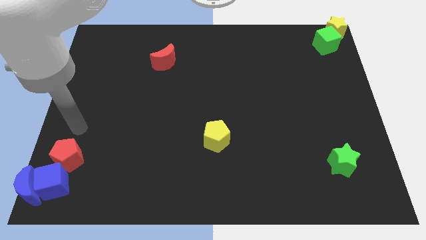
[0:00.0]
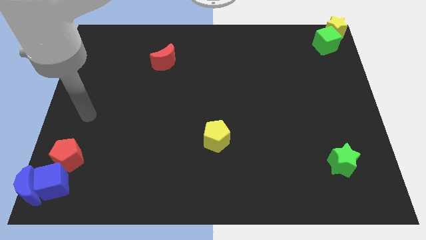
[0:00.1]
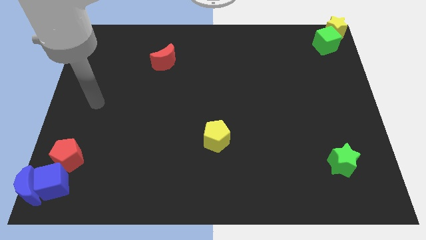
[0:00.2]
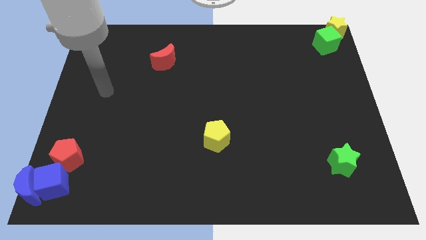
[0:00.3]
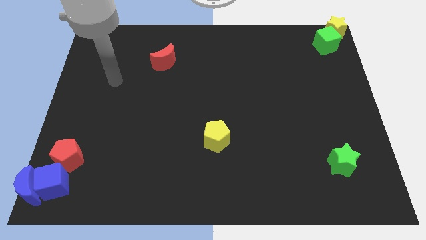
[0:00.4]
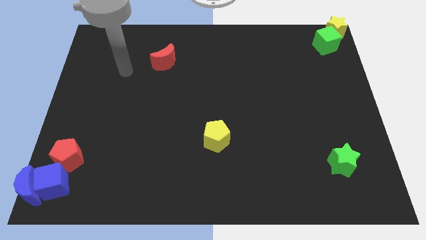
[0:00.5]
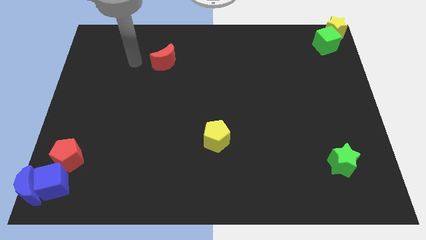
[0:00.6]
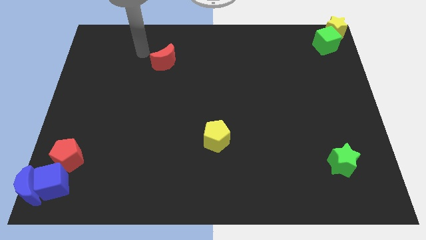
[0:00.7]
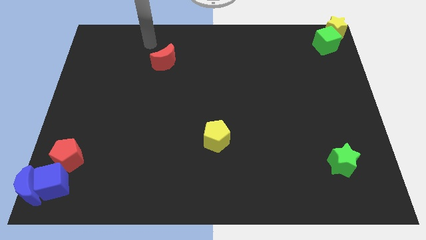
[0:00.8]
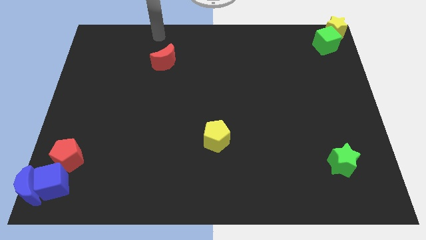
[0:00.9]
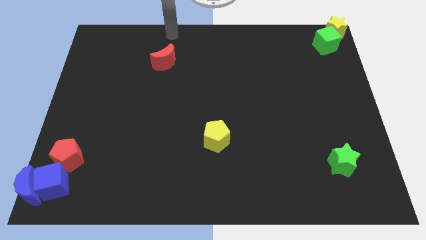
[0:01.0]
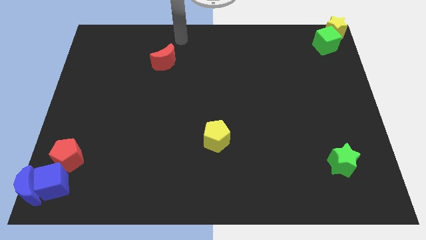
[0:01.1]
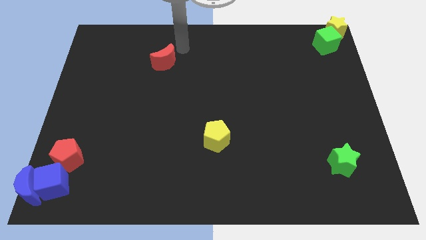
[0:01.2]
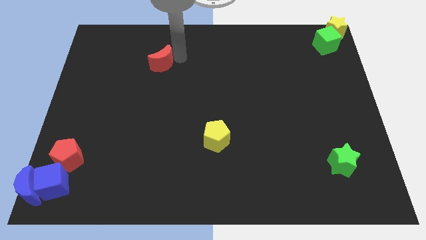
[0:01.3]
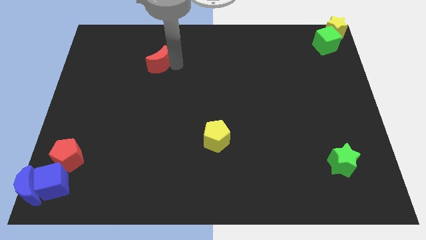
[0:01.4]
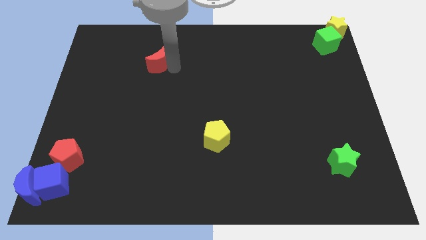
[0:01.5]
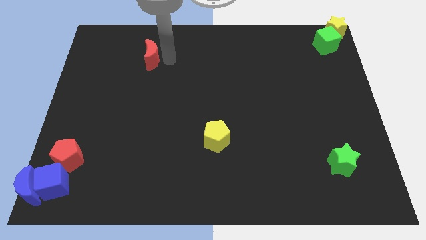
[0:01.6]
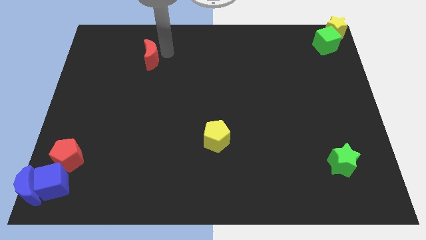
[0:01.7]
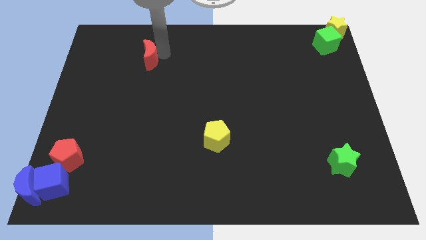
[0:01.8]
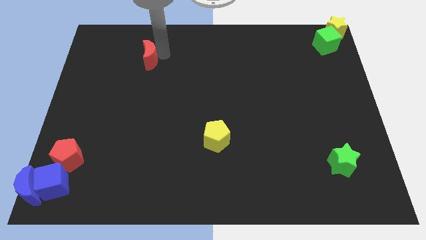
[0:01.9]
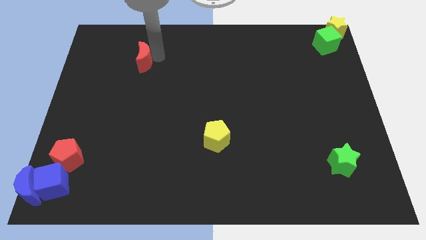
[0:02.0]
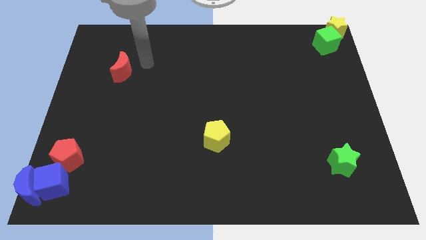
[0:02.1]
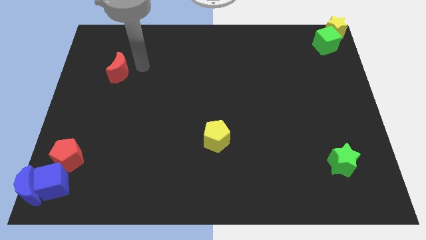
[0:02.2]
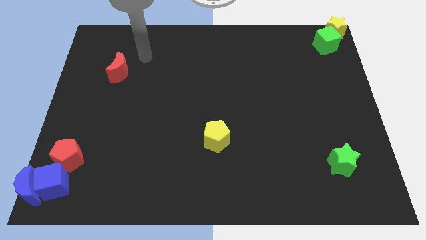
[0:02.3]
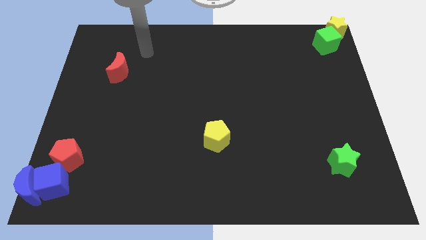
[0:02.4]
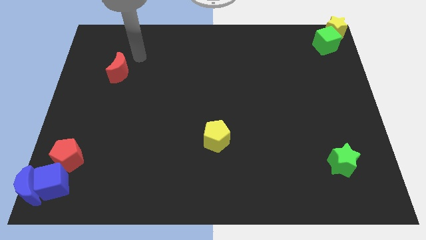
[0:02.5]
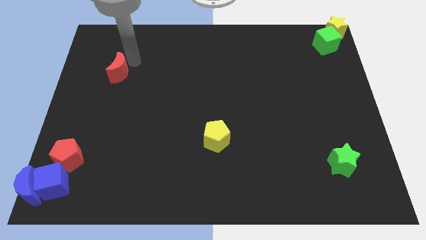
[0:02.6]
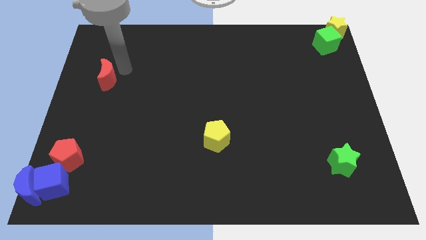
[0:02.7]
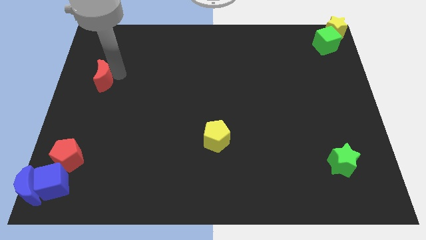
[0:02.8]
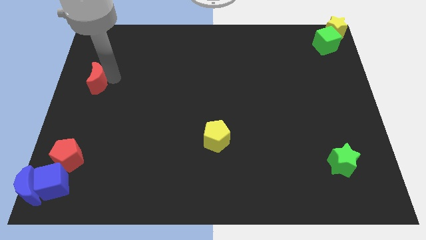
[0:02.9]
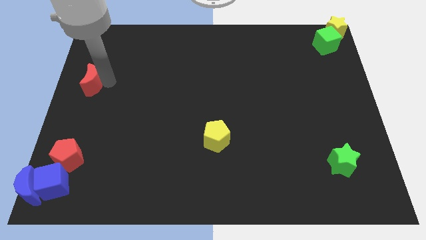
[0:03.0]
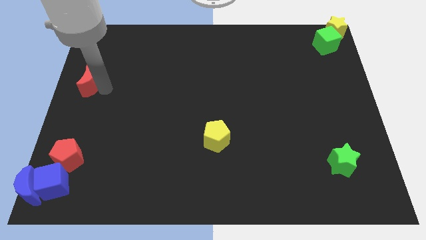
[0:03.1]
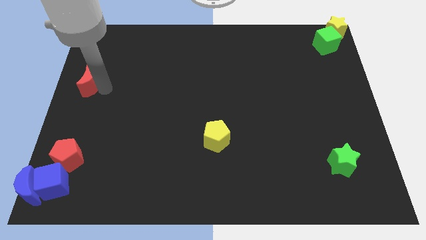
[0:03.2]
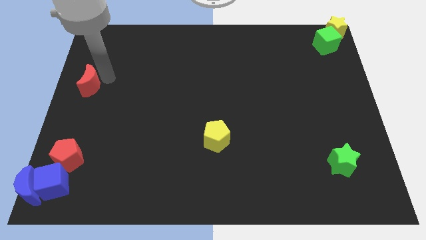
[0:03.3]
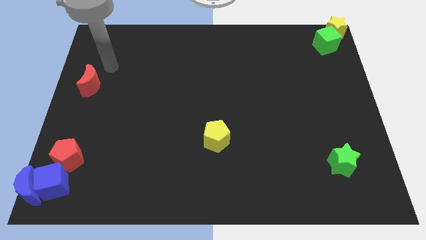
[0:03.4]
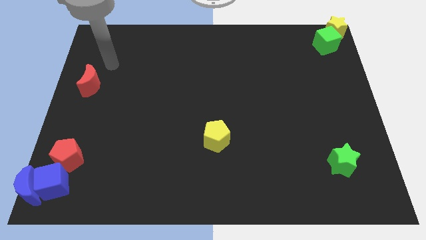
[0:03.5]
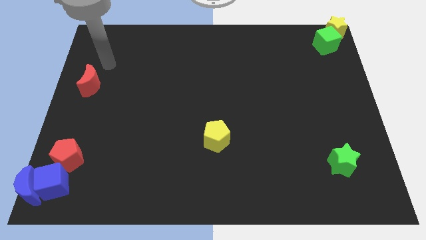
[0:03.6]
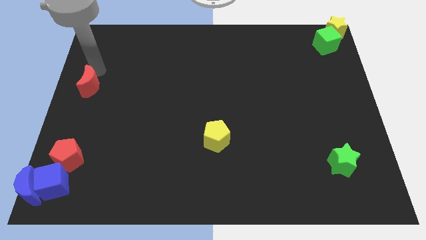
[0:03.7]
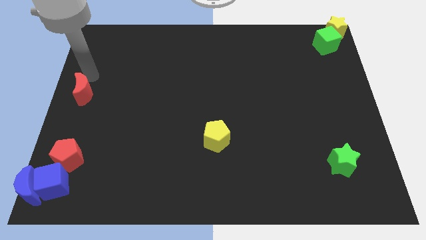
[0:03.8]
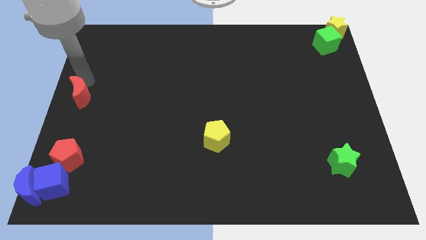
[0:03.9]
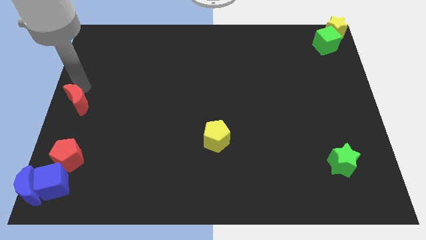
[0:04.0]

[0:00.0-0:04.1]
move the red crescent to the center left side of the board

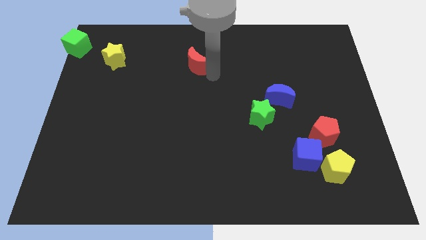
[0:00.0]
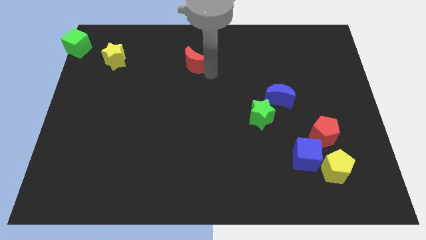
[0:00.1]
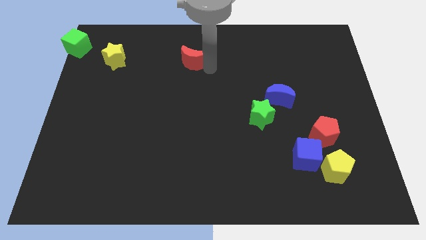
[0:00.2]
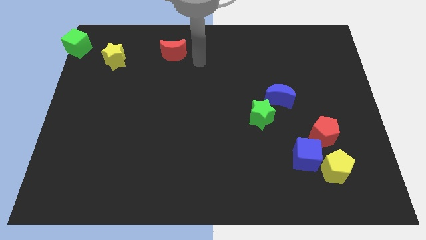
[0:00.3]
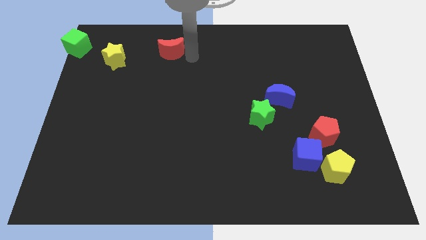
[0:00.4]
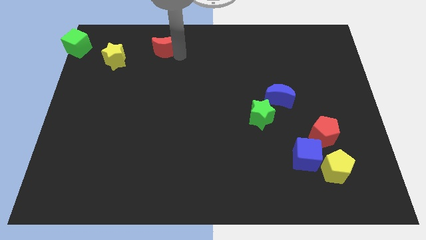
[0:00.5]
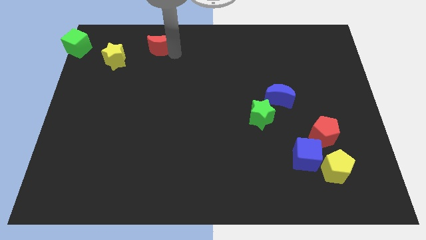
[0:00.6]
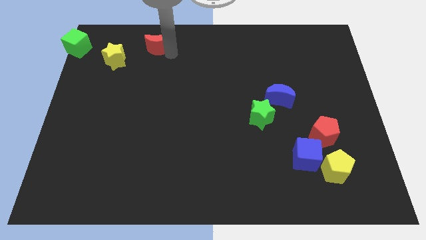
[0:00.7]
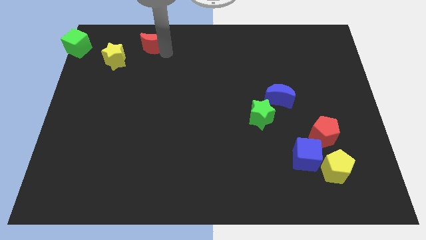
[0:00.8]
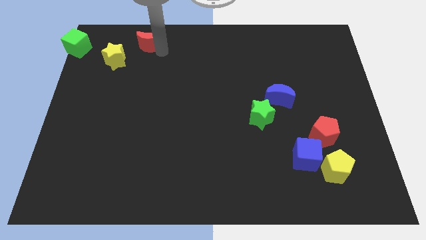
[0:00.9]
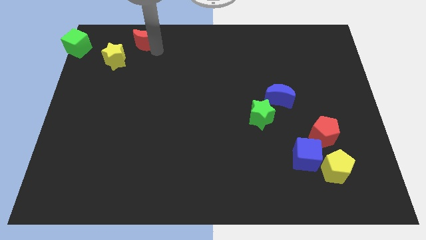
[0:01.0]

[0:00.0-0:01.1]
slide red moon to top right of yellow star

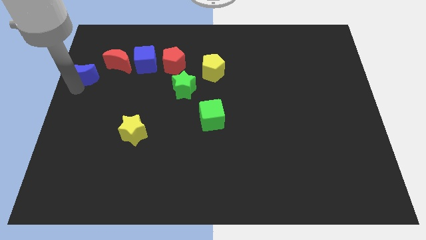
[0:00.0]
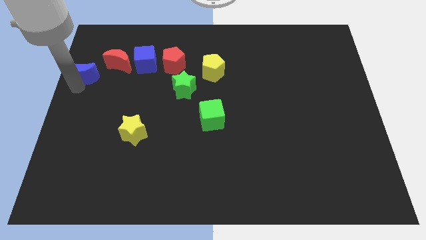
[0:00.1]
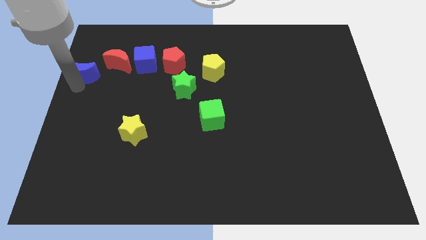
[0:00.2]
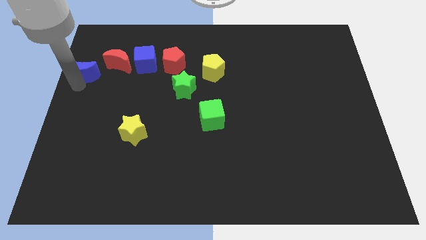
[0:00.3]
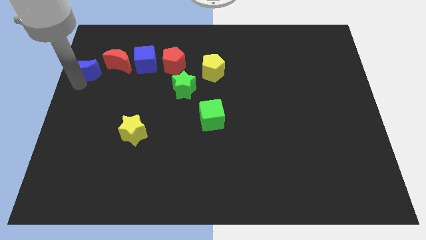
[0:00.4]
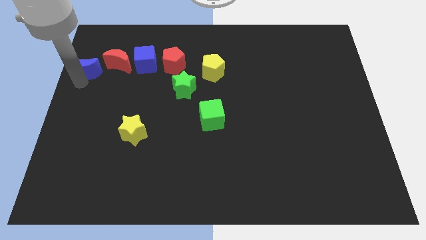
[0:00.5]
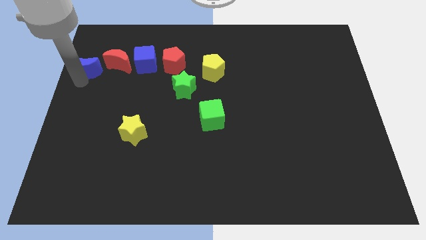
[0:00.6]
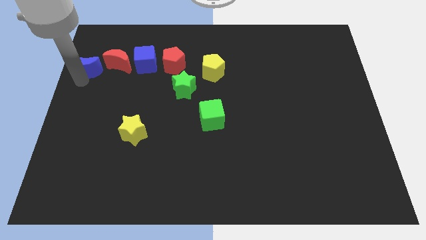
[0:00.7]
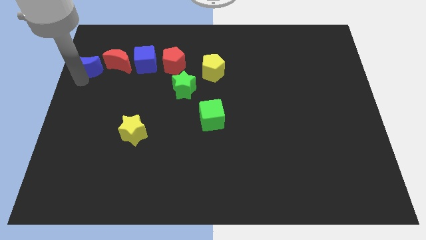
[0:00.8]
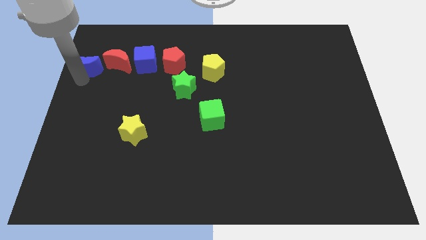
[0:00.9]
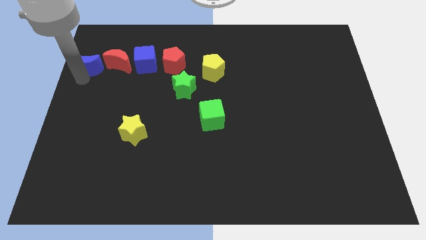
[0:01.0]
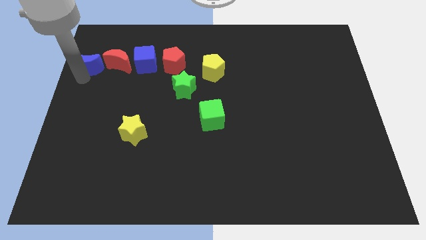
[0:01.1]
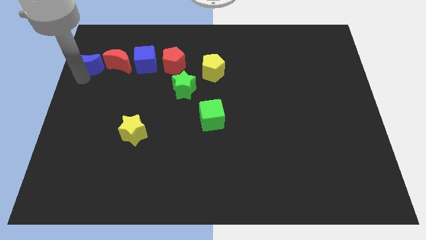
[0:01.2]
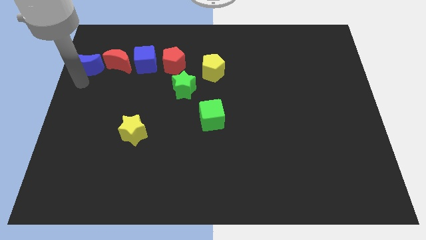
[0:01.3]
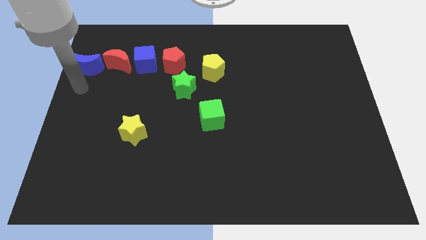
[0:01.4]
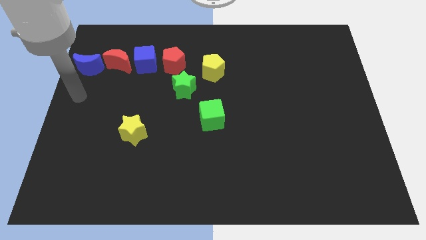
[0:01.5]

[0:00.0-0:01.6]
move the blue crescent to the left of the red crescent

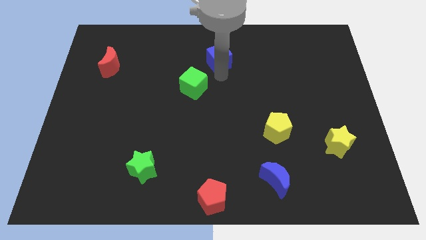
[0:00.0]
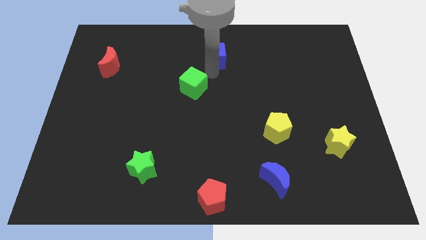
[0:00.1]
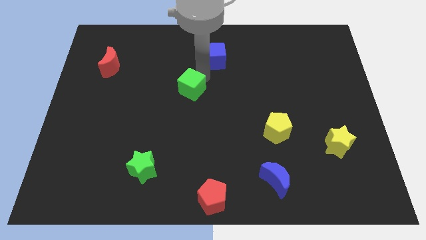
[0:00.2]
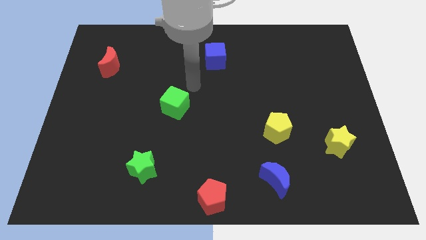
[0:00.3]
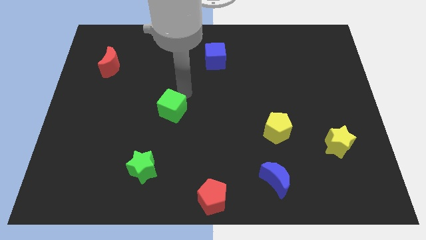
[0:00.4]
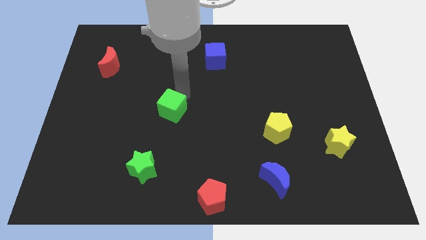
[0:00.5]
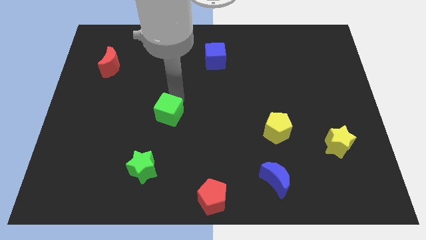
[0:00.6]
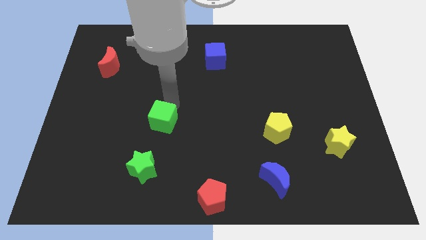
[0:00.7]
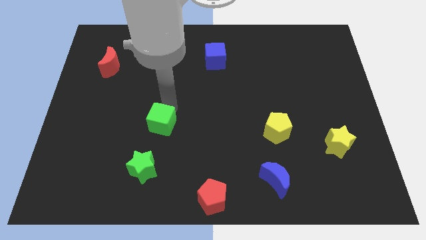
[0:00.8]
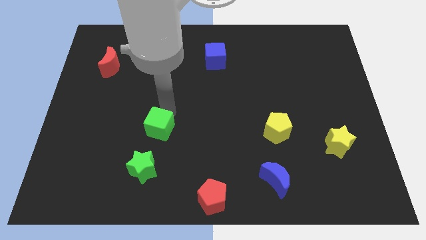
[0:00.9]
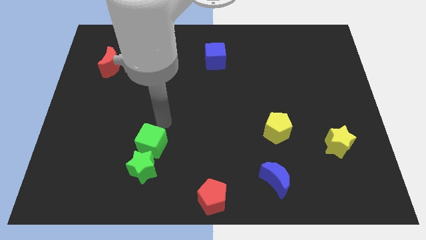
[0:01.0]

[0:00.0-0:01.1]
place green cube near to green star

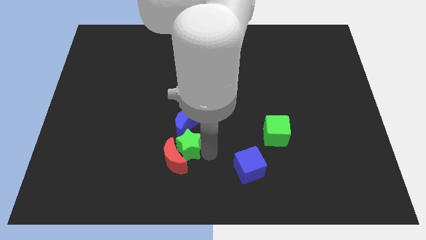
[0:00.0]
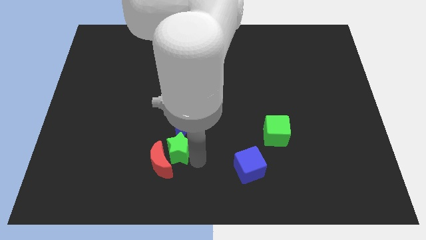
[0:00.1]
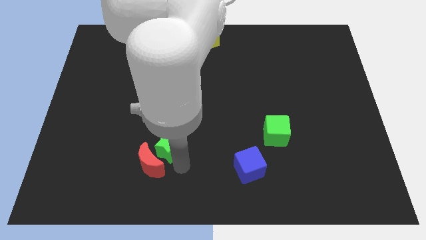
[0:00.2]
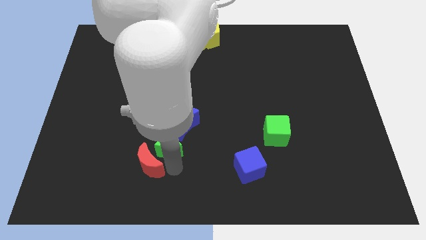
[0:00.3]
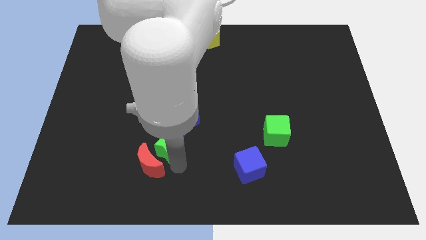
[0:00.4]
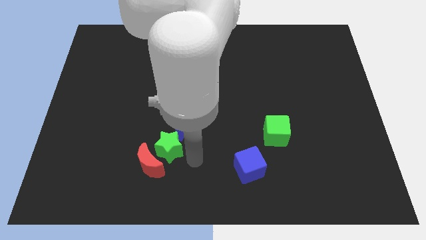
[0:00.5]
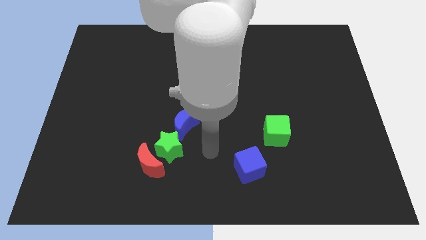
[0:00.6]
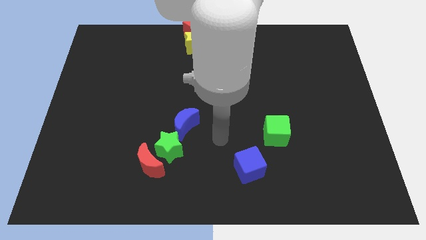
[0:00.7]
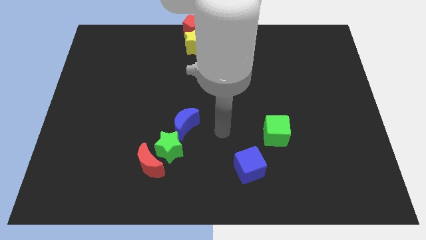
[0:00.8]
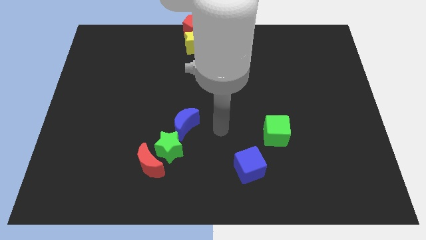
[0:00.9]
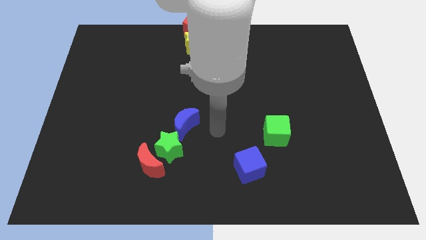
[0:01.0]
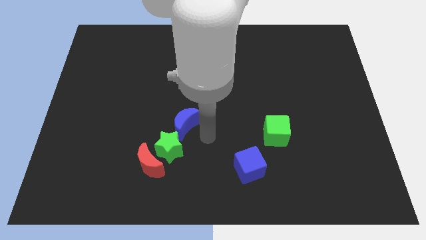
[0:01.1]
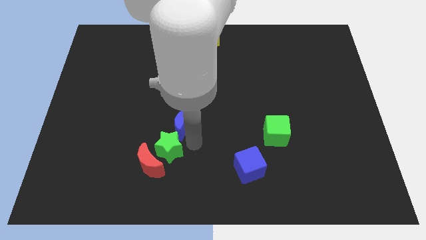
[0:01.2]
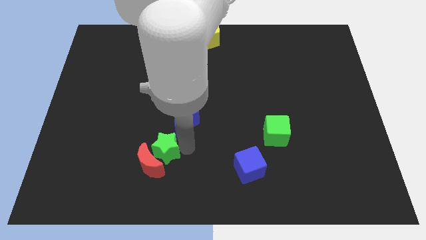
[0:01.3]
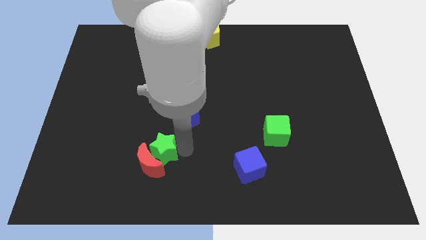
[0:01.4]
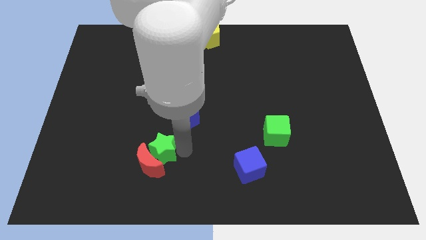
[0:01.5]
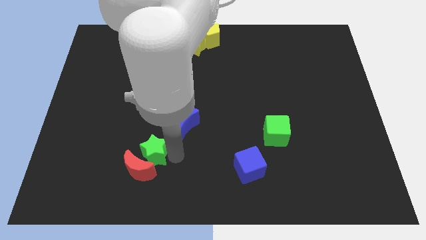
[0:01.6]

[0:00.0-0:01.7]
slightly push red moon with the green star
